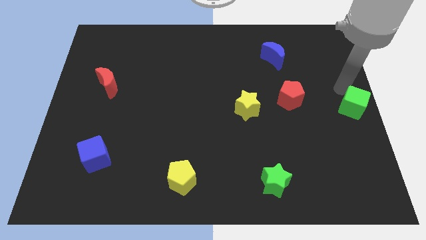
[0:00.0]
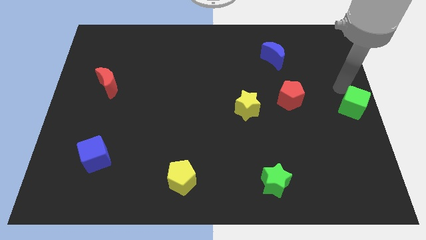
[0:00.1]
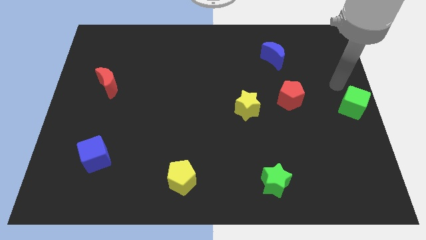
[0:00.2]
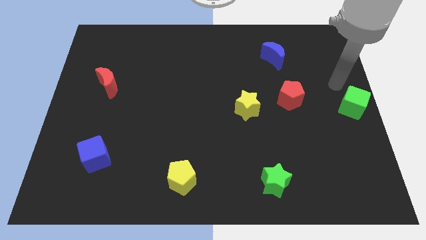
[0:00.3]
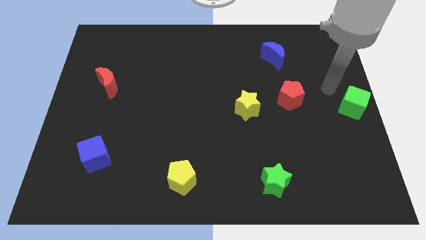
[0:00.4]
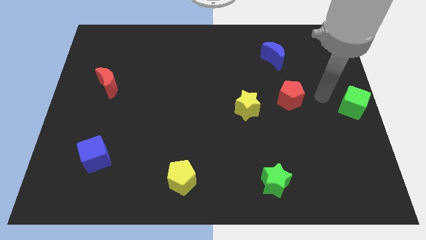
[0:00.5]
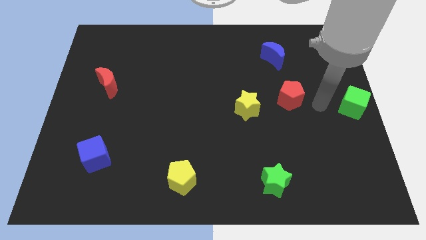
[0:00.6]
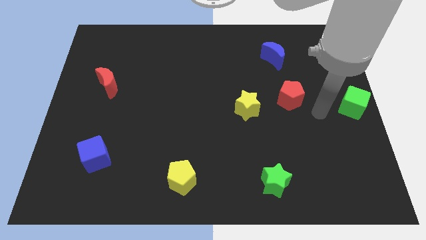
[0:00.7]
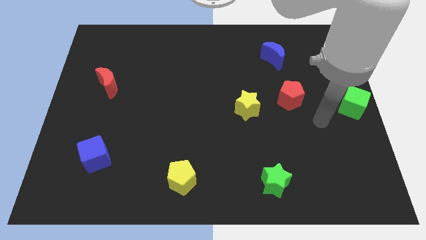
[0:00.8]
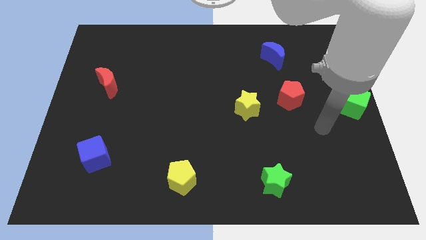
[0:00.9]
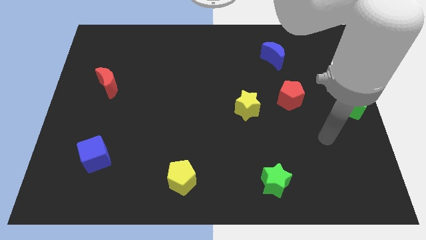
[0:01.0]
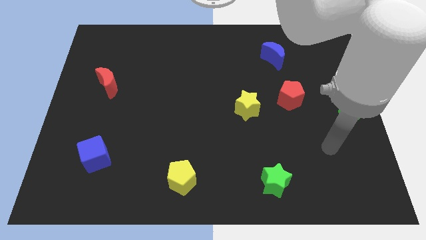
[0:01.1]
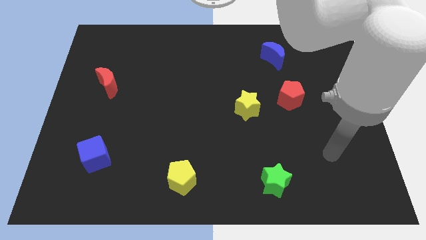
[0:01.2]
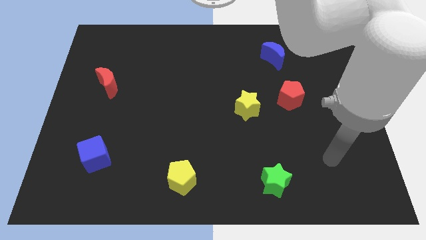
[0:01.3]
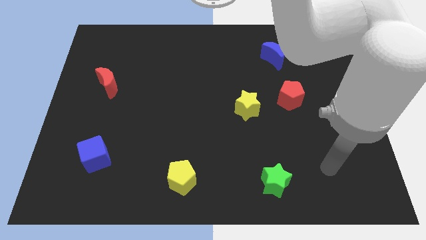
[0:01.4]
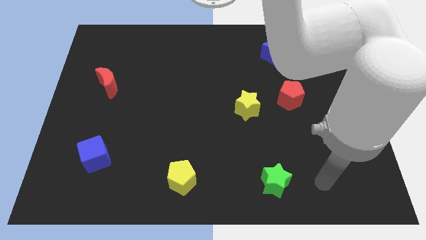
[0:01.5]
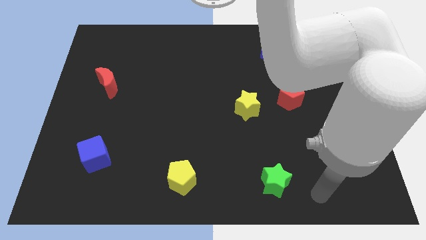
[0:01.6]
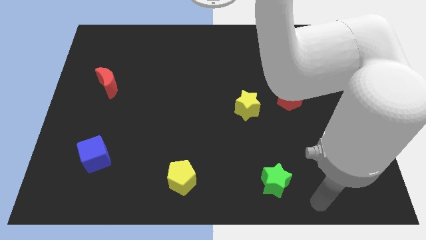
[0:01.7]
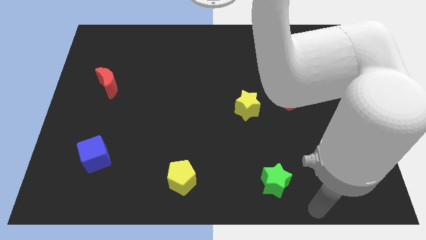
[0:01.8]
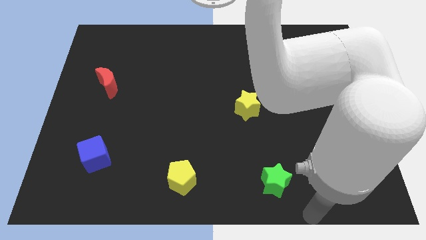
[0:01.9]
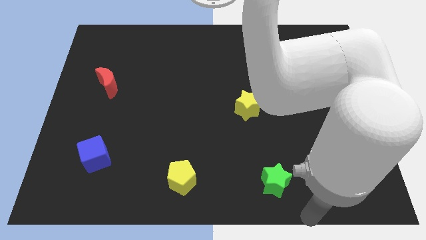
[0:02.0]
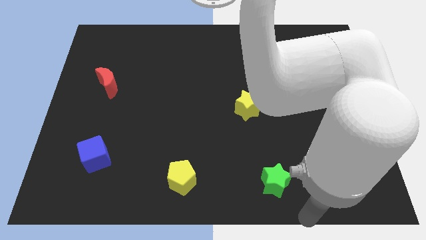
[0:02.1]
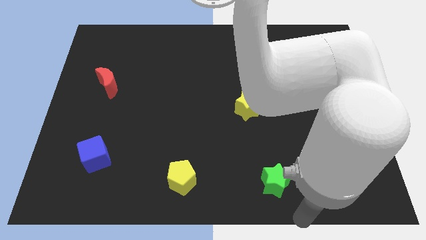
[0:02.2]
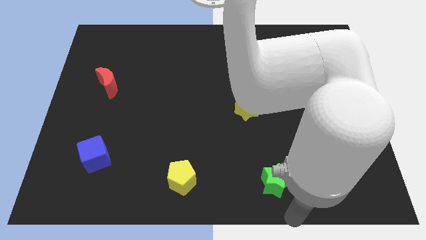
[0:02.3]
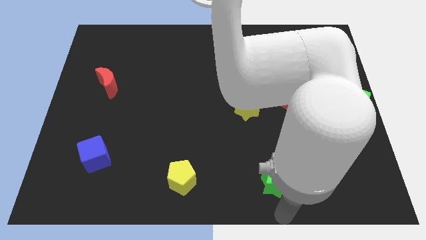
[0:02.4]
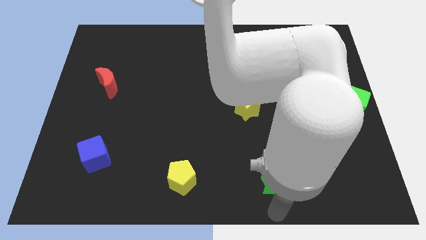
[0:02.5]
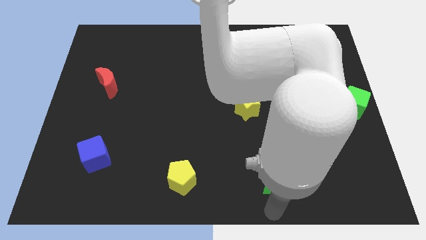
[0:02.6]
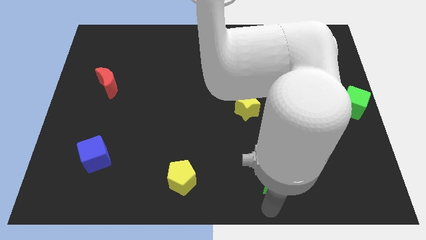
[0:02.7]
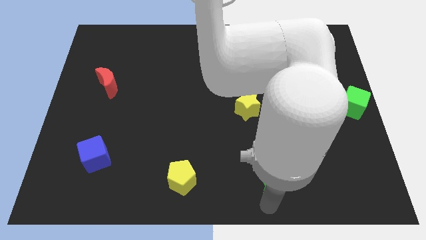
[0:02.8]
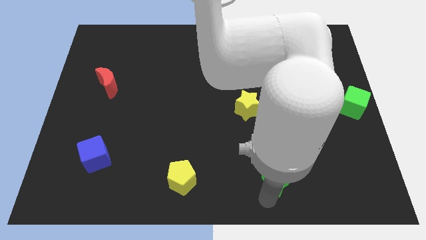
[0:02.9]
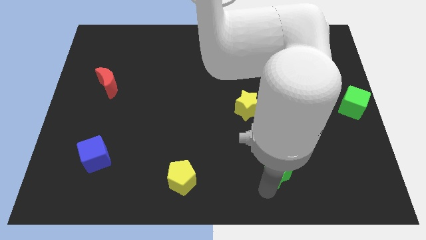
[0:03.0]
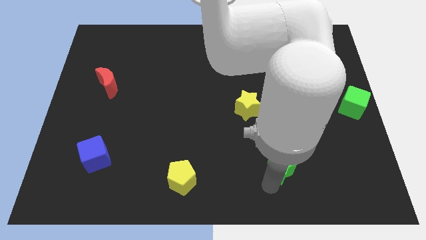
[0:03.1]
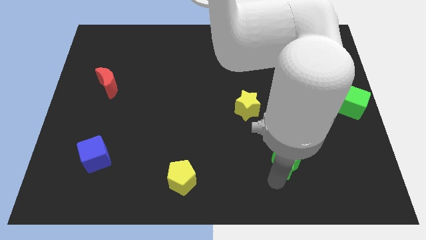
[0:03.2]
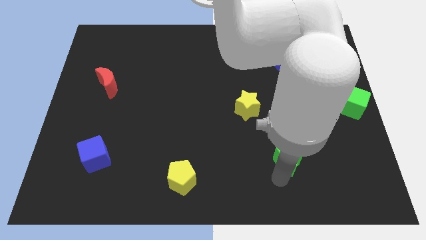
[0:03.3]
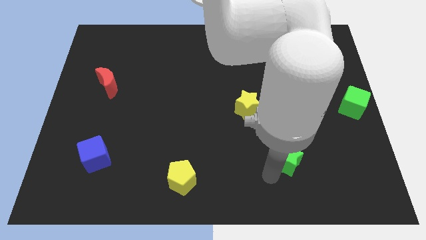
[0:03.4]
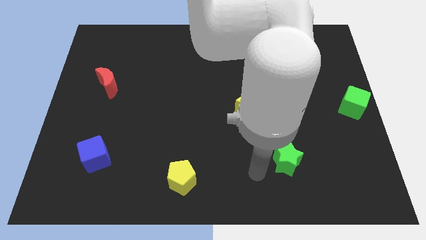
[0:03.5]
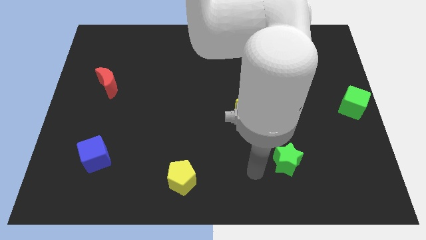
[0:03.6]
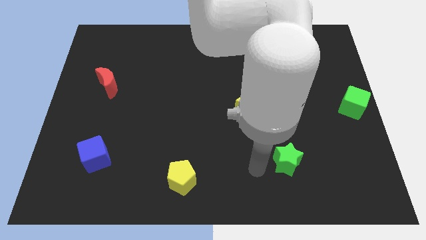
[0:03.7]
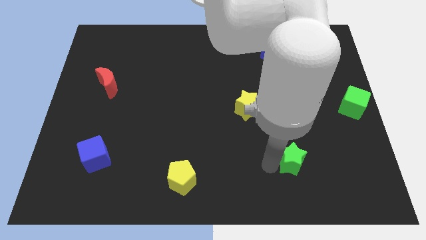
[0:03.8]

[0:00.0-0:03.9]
place the green star diagonally to green cube

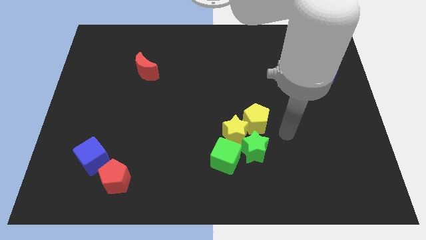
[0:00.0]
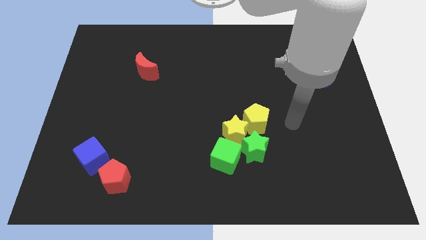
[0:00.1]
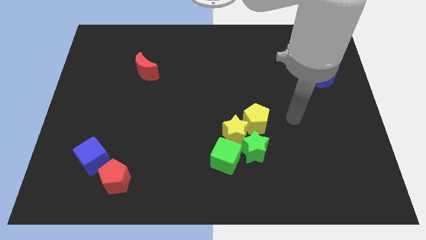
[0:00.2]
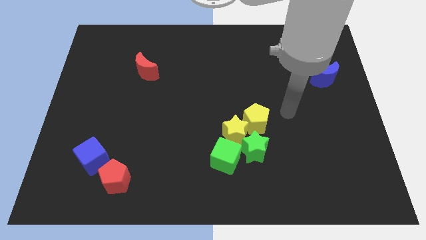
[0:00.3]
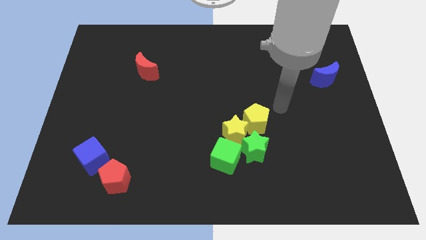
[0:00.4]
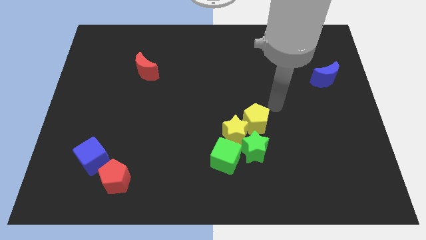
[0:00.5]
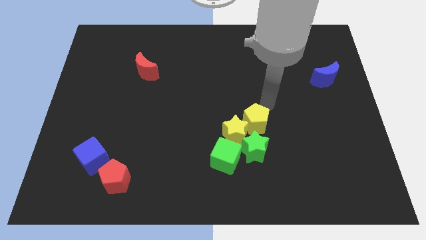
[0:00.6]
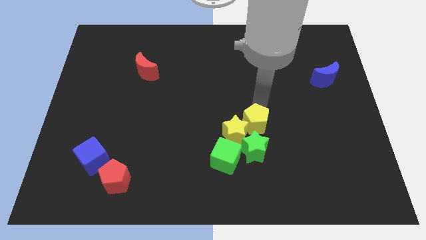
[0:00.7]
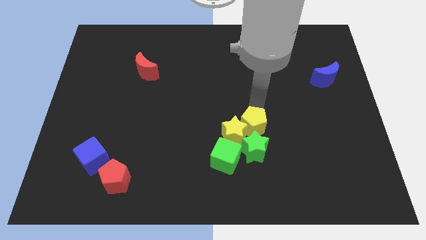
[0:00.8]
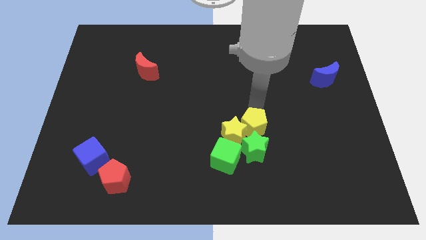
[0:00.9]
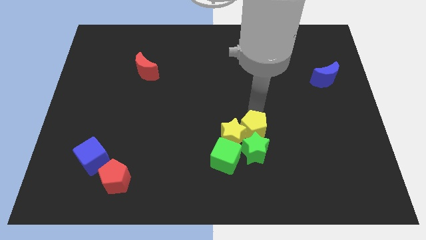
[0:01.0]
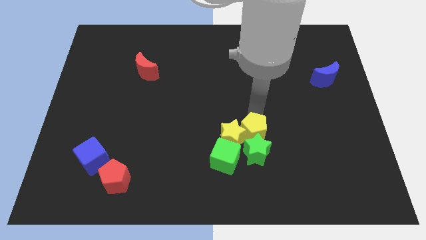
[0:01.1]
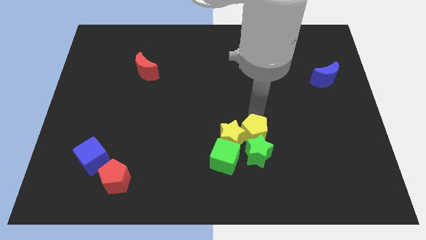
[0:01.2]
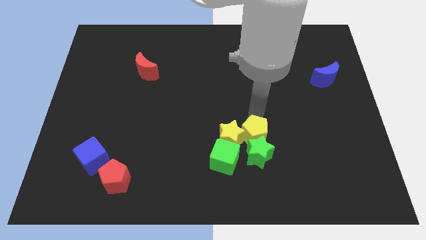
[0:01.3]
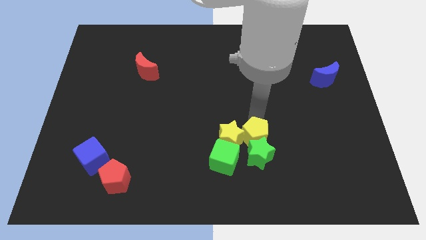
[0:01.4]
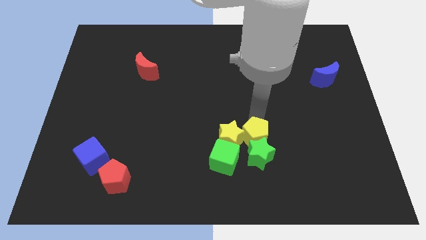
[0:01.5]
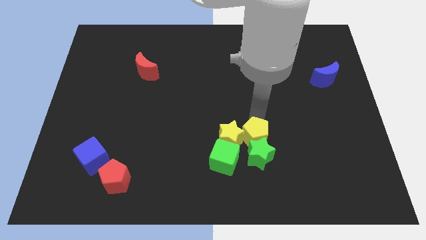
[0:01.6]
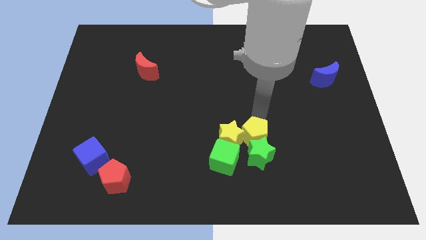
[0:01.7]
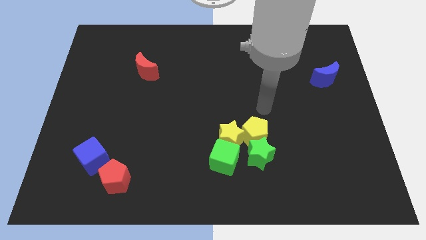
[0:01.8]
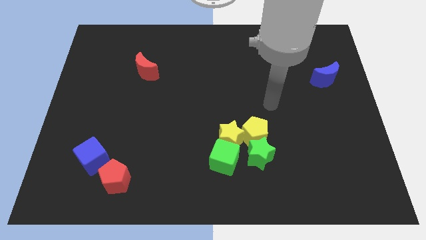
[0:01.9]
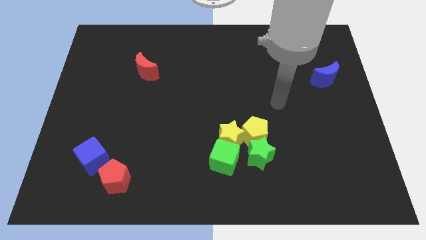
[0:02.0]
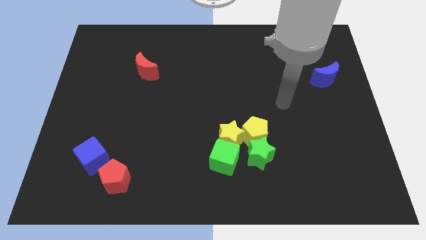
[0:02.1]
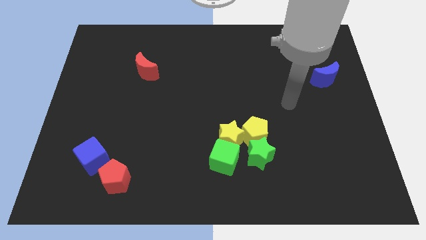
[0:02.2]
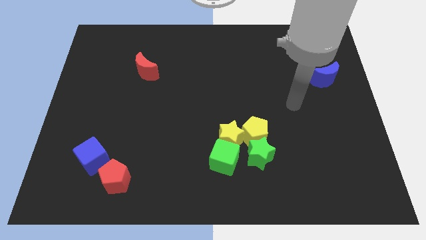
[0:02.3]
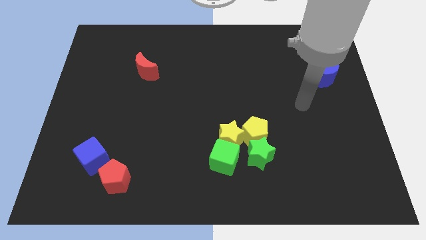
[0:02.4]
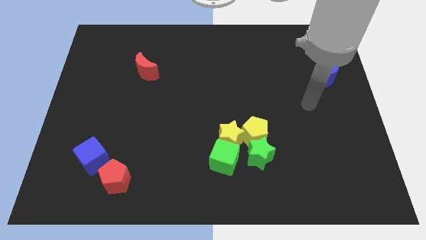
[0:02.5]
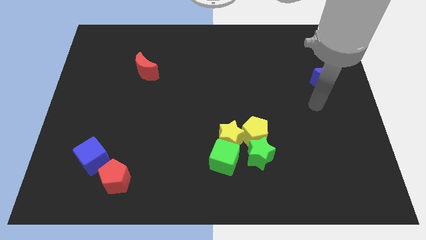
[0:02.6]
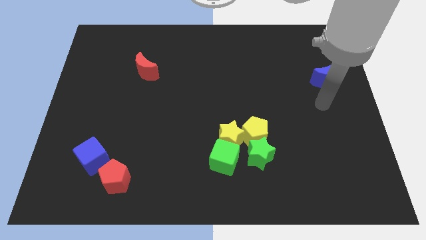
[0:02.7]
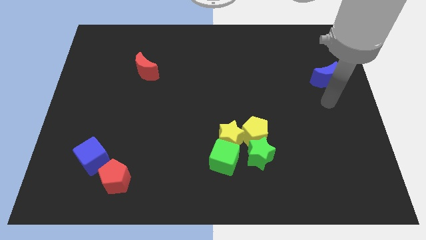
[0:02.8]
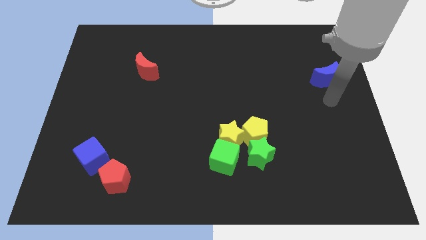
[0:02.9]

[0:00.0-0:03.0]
move the yellow pentagon into the green star

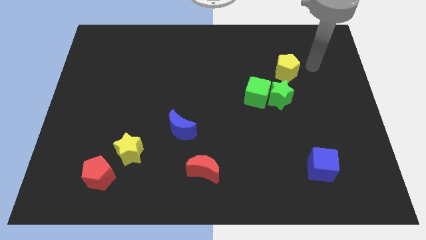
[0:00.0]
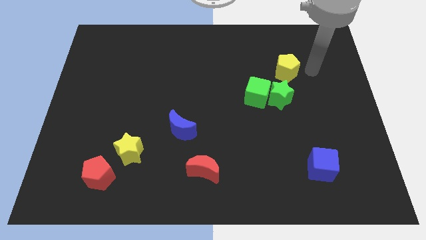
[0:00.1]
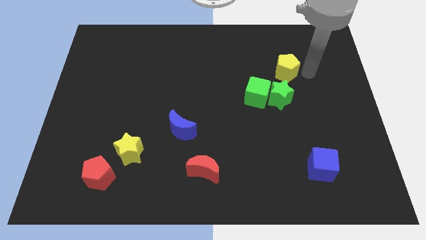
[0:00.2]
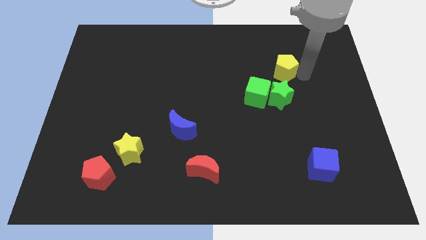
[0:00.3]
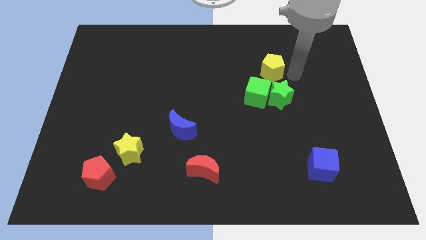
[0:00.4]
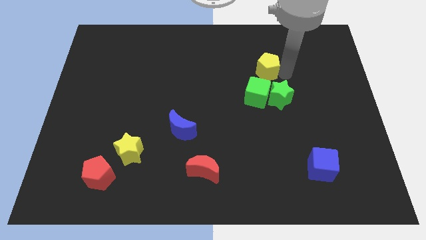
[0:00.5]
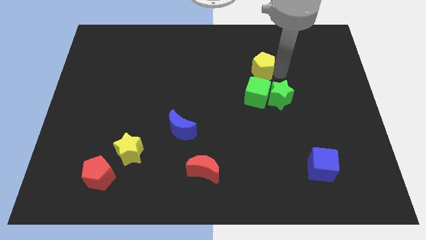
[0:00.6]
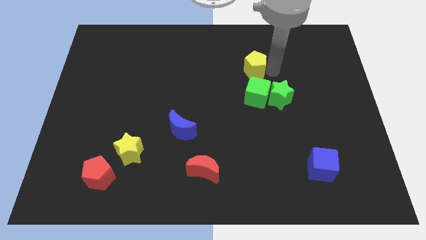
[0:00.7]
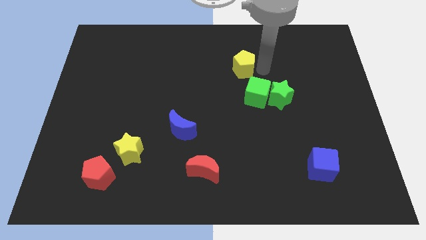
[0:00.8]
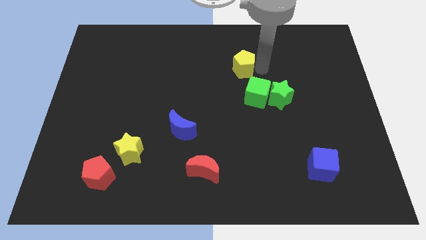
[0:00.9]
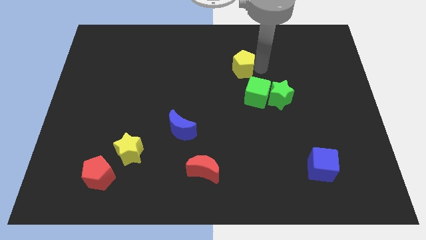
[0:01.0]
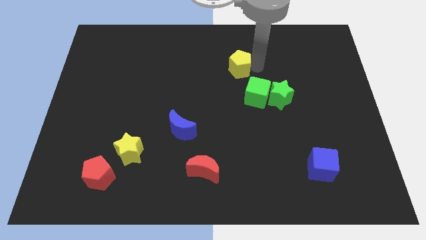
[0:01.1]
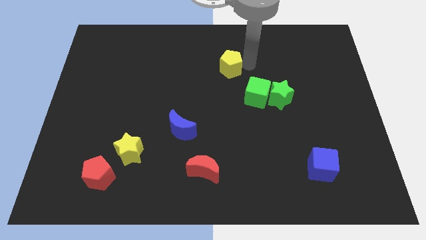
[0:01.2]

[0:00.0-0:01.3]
move yellow pentagon on left side

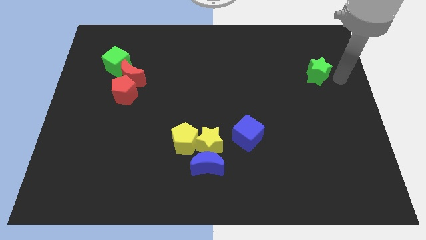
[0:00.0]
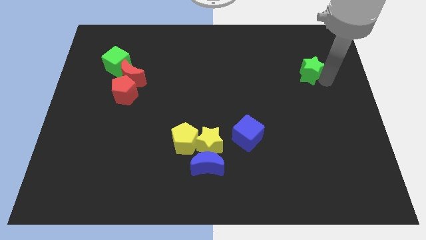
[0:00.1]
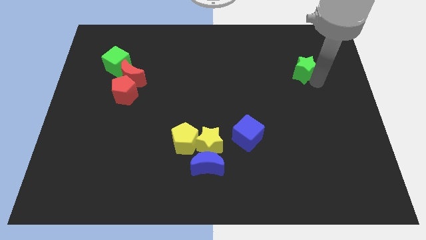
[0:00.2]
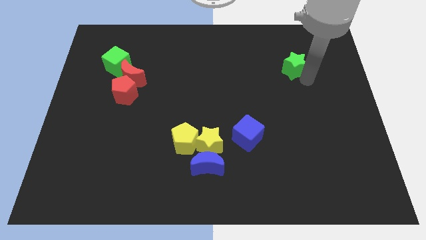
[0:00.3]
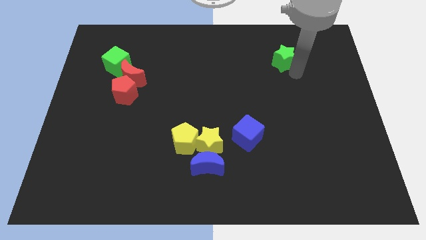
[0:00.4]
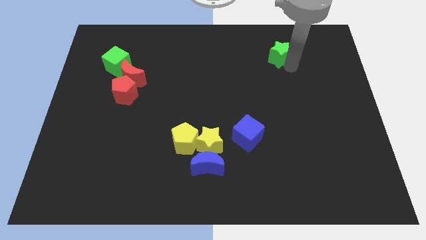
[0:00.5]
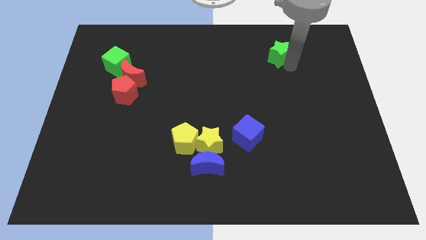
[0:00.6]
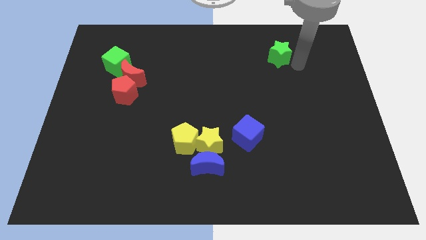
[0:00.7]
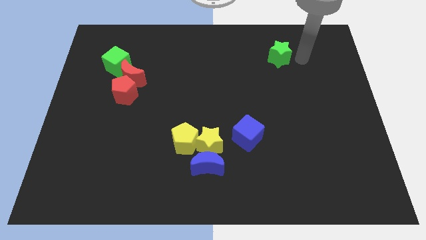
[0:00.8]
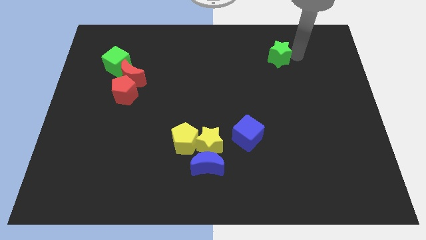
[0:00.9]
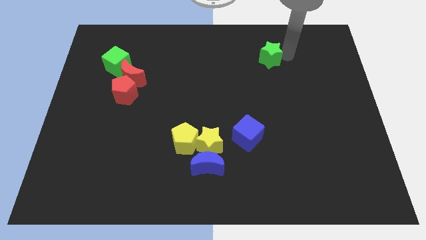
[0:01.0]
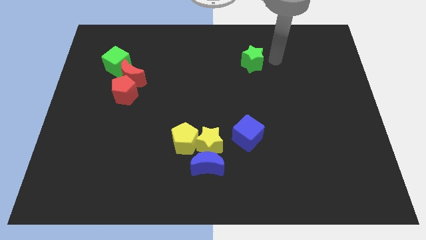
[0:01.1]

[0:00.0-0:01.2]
push the green star towards the top center of the board
